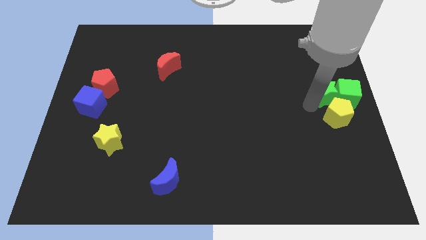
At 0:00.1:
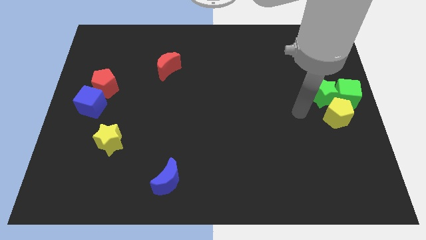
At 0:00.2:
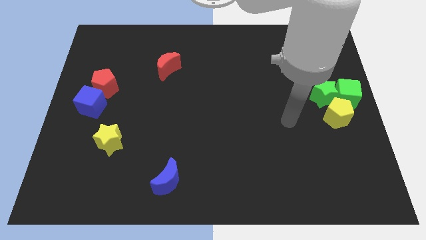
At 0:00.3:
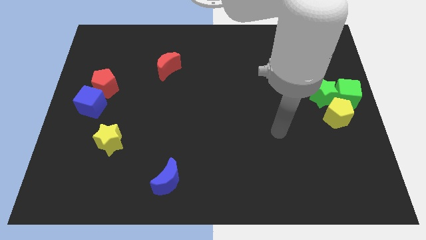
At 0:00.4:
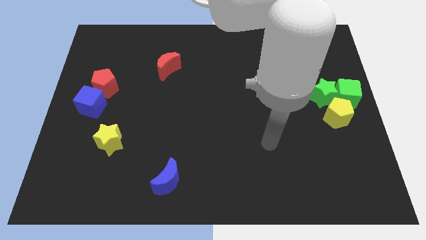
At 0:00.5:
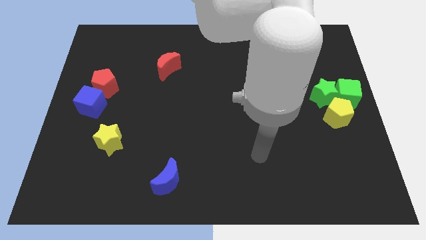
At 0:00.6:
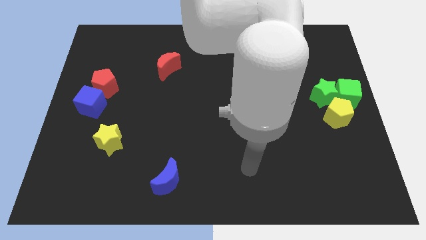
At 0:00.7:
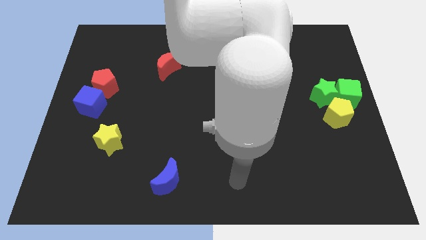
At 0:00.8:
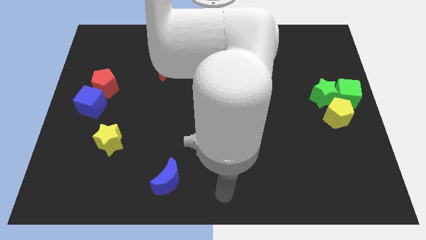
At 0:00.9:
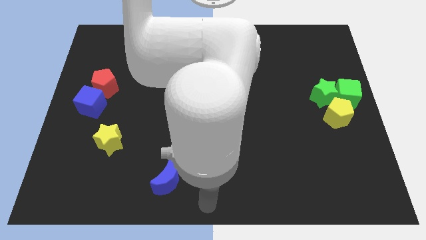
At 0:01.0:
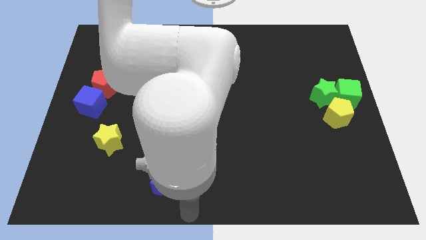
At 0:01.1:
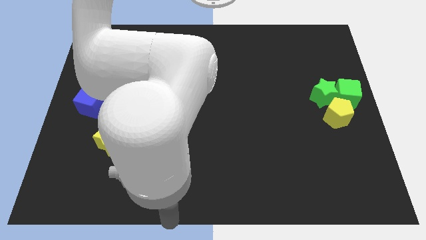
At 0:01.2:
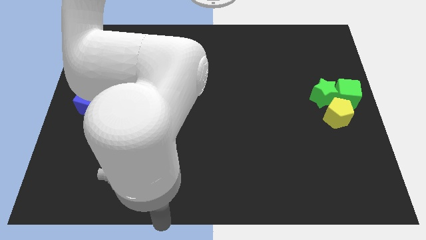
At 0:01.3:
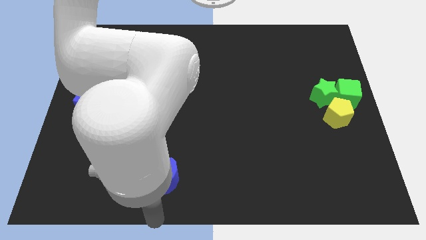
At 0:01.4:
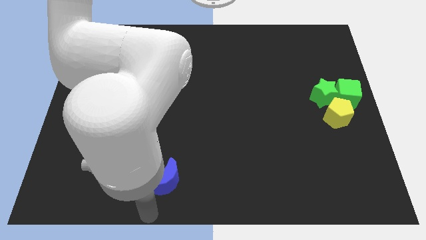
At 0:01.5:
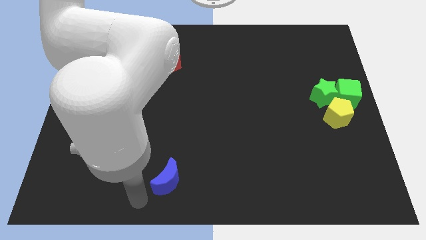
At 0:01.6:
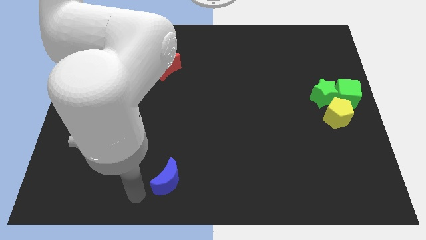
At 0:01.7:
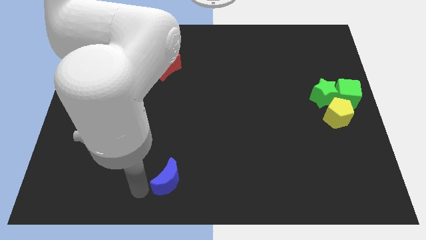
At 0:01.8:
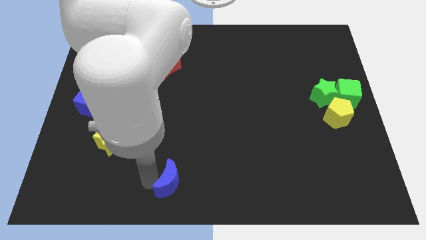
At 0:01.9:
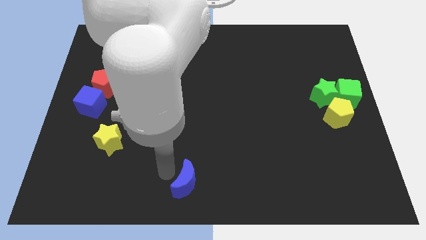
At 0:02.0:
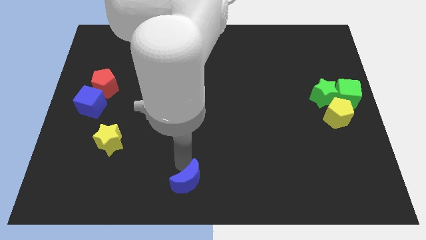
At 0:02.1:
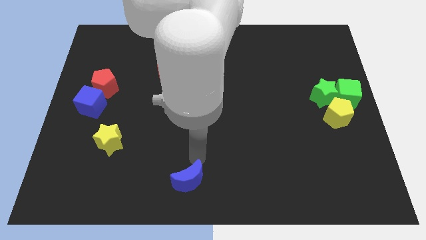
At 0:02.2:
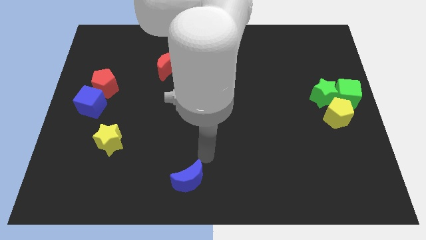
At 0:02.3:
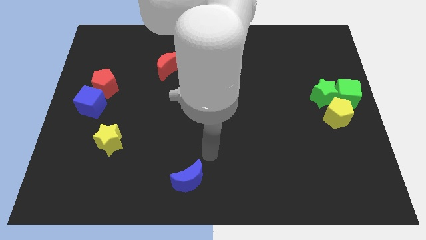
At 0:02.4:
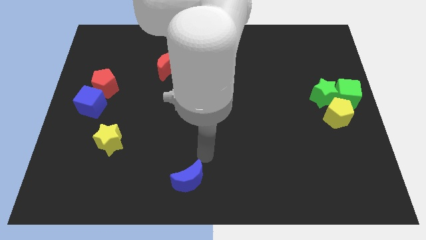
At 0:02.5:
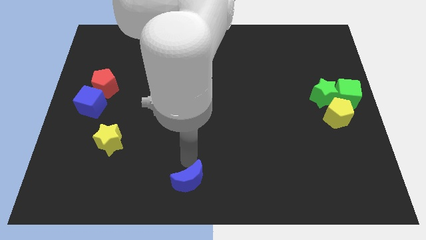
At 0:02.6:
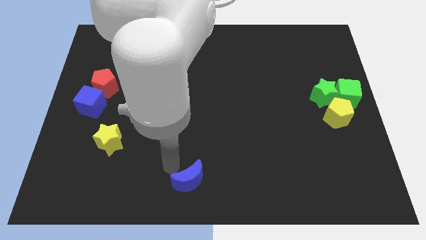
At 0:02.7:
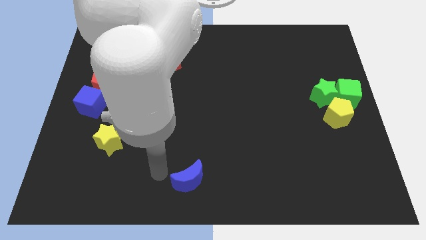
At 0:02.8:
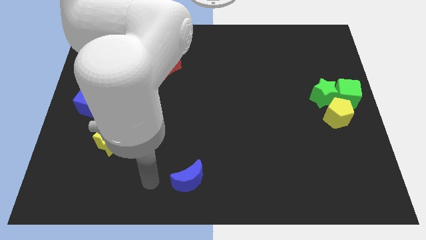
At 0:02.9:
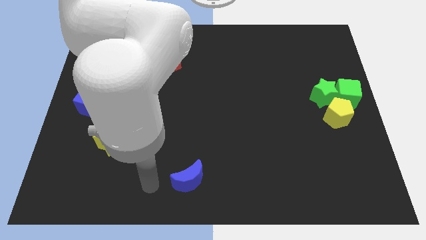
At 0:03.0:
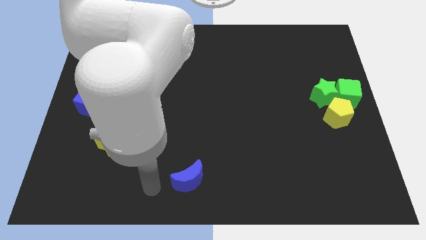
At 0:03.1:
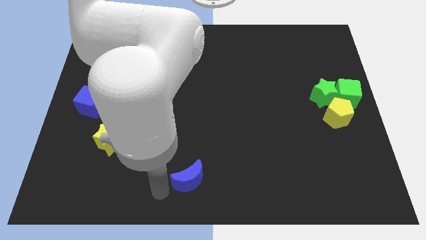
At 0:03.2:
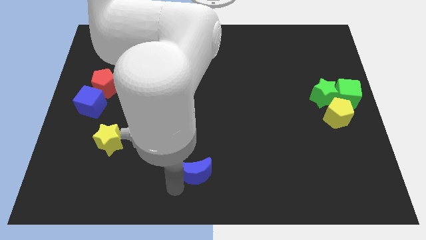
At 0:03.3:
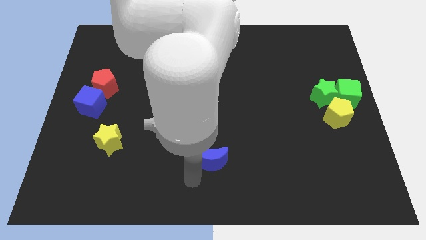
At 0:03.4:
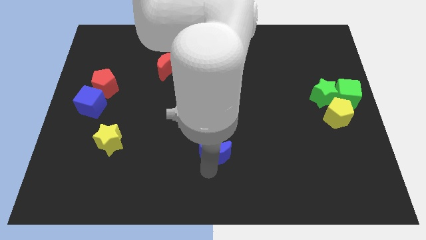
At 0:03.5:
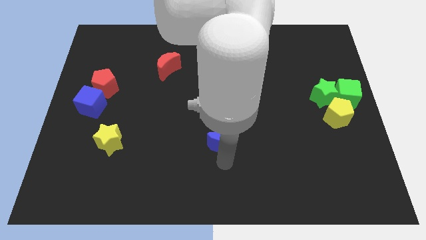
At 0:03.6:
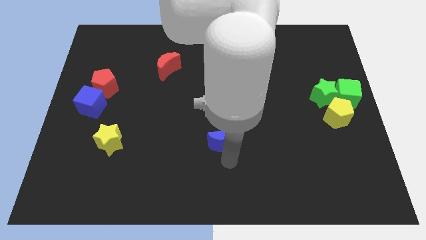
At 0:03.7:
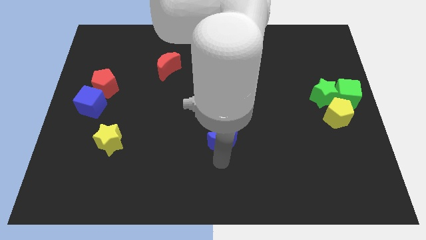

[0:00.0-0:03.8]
push the blue crescent to the right of the yellow star

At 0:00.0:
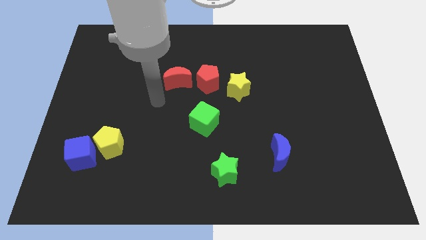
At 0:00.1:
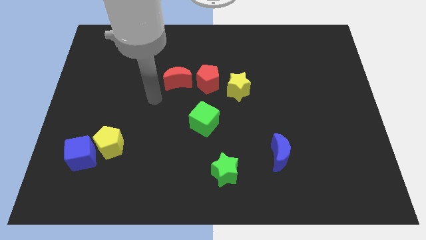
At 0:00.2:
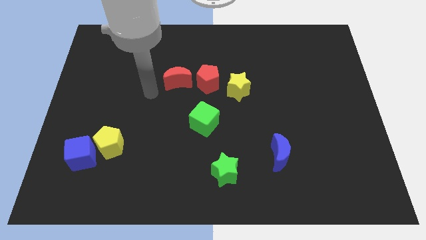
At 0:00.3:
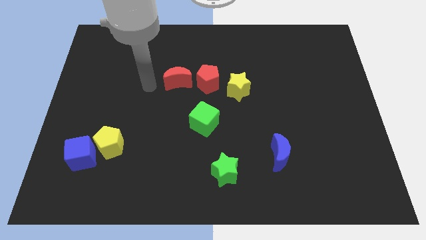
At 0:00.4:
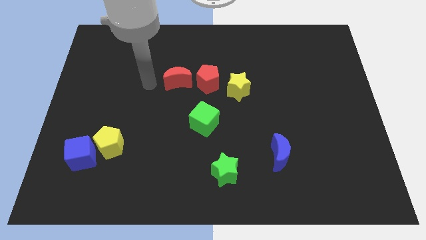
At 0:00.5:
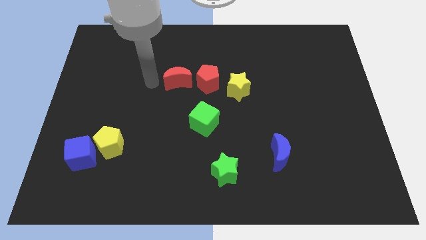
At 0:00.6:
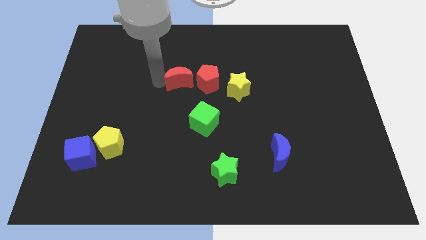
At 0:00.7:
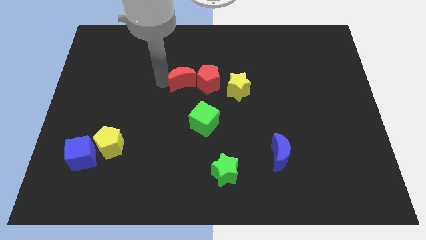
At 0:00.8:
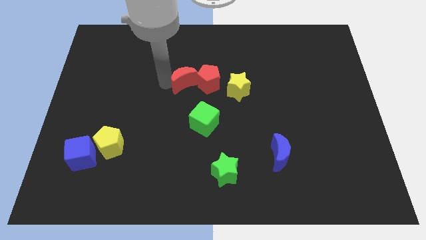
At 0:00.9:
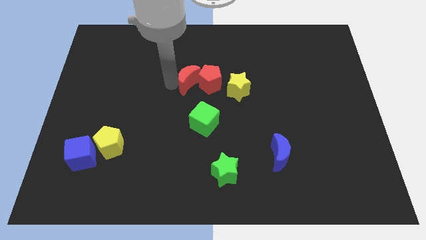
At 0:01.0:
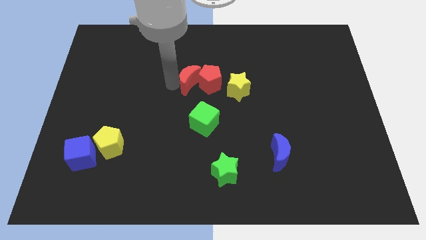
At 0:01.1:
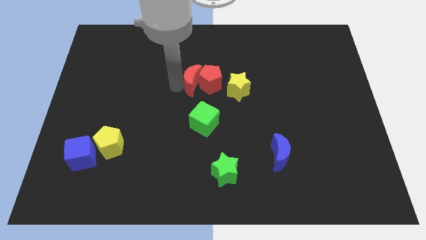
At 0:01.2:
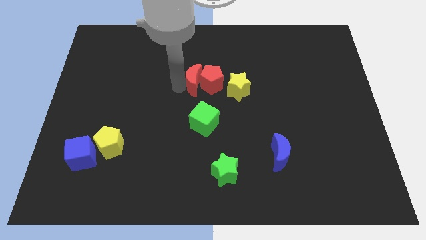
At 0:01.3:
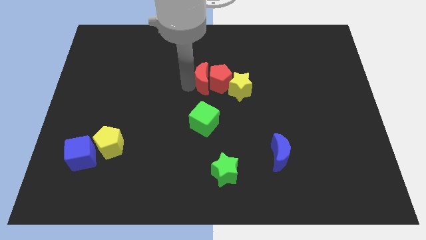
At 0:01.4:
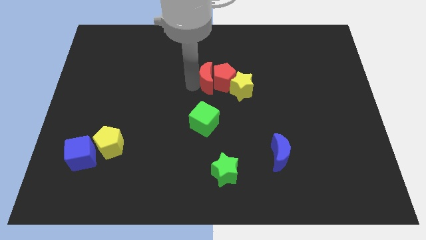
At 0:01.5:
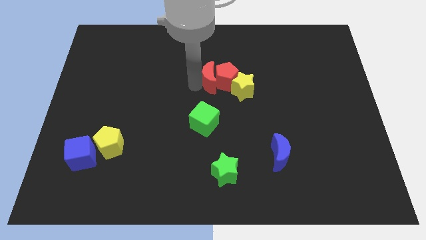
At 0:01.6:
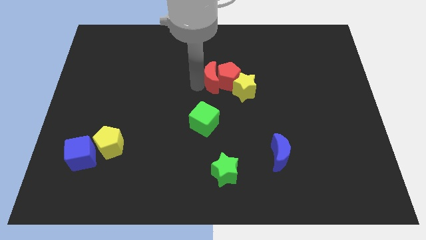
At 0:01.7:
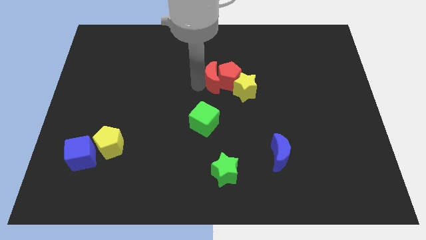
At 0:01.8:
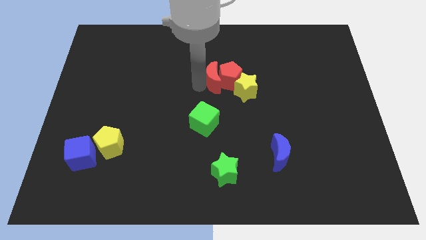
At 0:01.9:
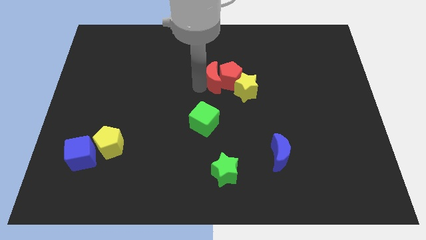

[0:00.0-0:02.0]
move red moon close to red pentagon

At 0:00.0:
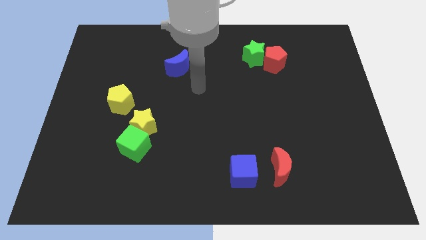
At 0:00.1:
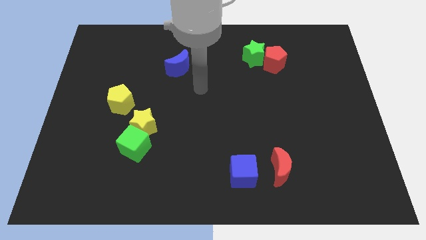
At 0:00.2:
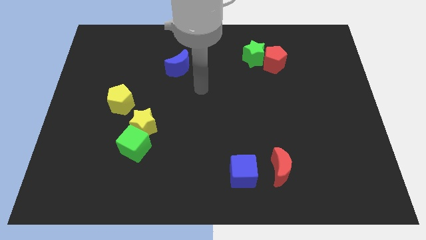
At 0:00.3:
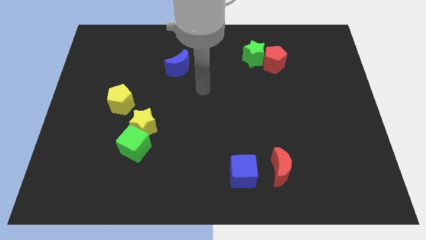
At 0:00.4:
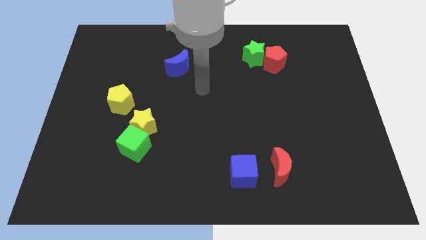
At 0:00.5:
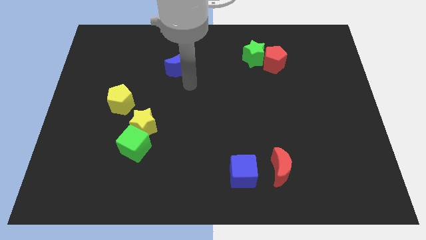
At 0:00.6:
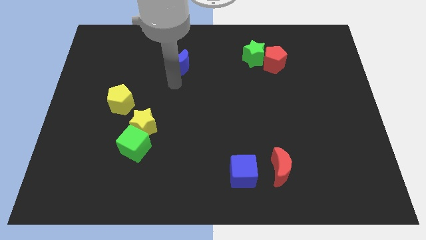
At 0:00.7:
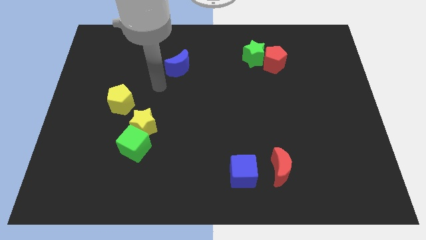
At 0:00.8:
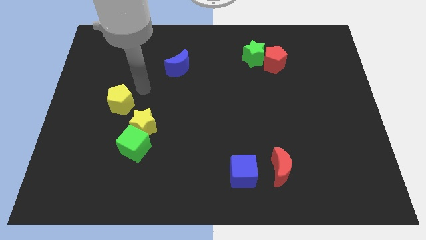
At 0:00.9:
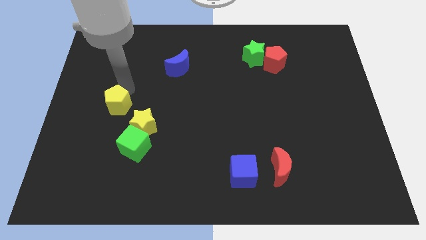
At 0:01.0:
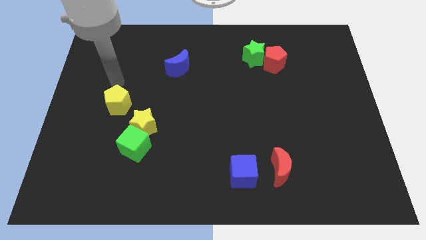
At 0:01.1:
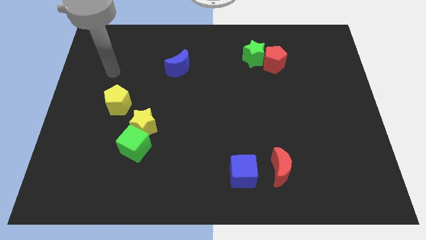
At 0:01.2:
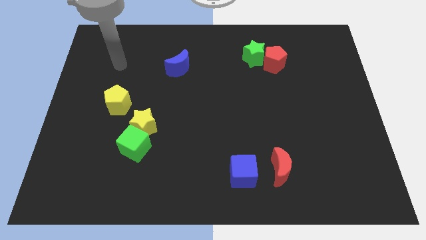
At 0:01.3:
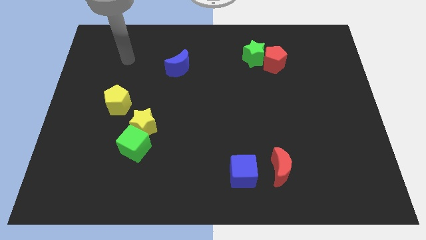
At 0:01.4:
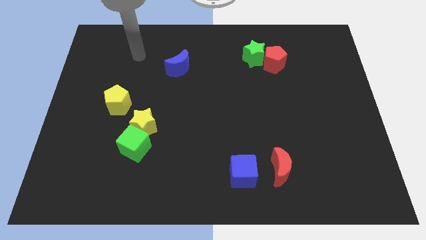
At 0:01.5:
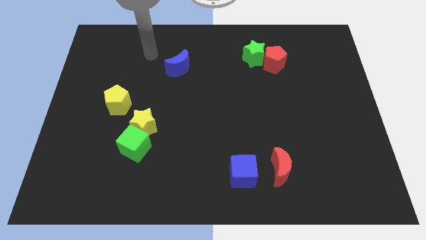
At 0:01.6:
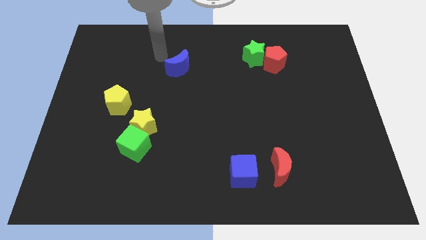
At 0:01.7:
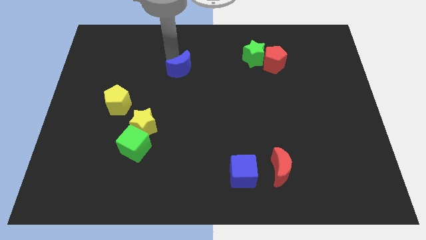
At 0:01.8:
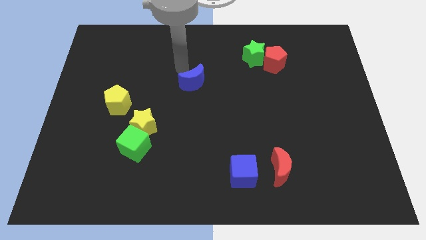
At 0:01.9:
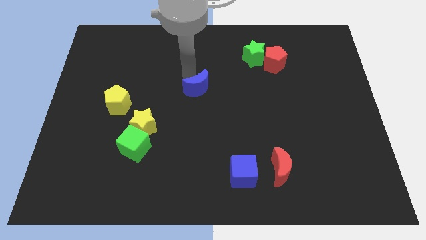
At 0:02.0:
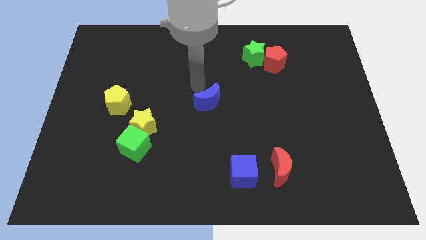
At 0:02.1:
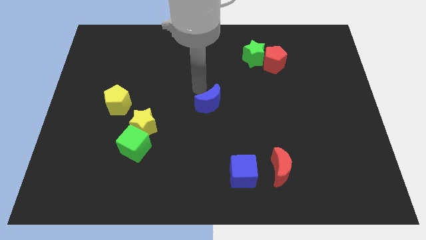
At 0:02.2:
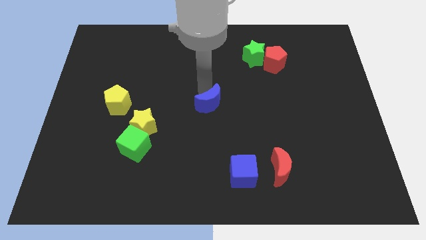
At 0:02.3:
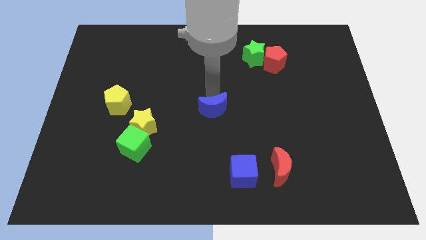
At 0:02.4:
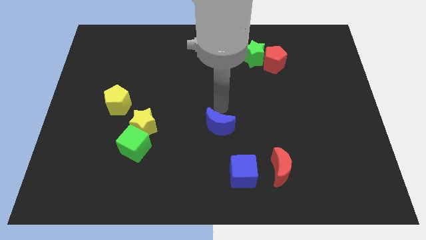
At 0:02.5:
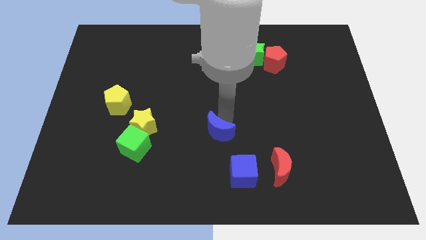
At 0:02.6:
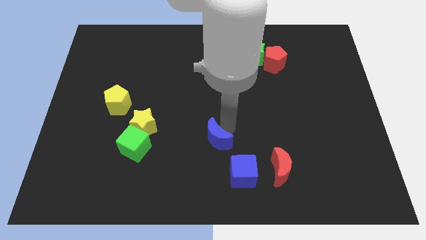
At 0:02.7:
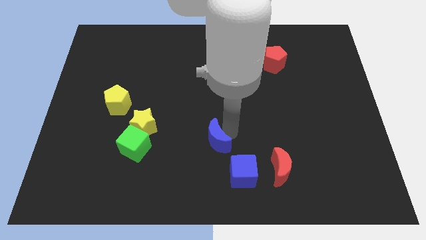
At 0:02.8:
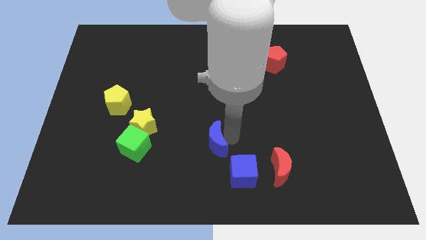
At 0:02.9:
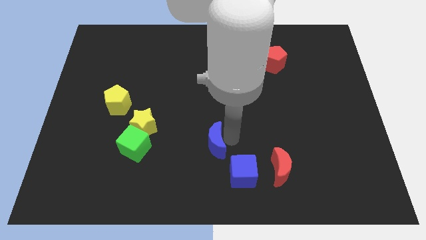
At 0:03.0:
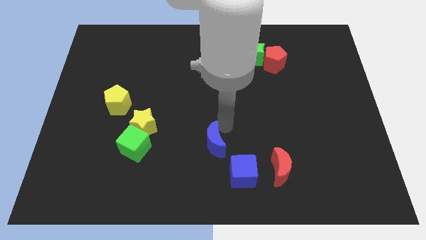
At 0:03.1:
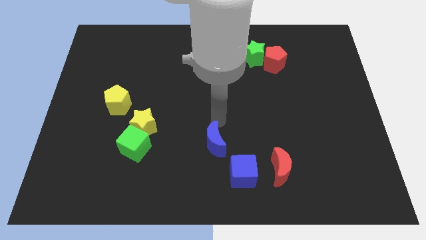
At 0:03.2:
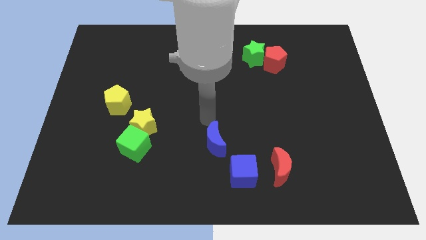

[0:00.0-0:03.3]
move the blue moon to the top left of the blue cube
